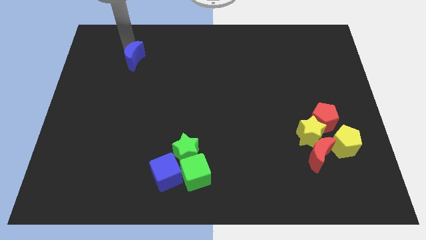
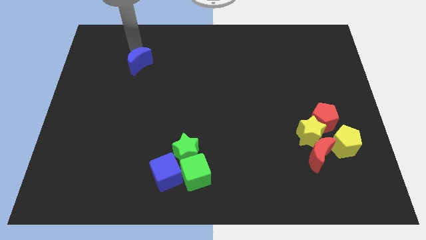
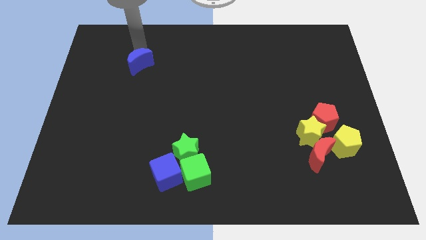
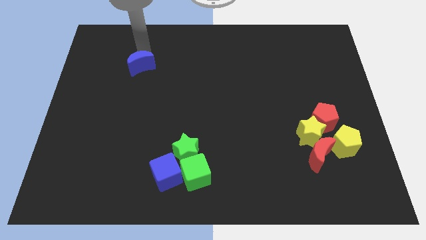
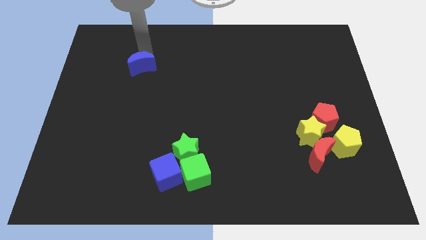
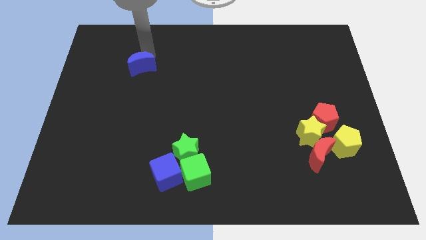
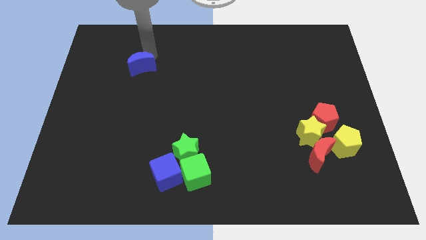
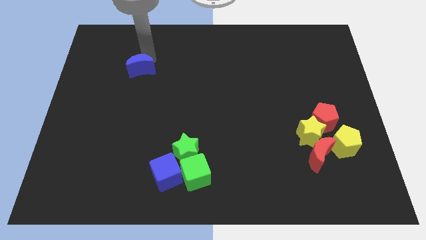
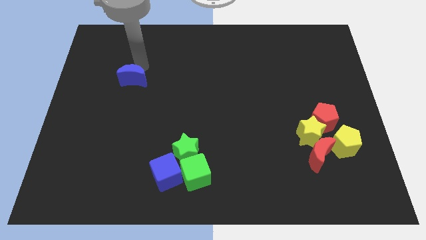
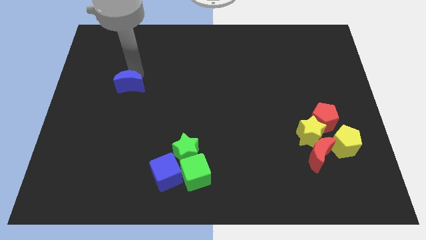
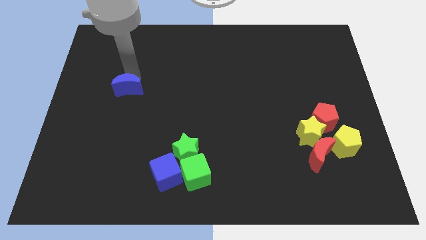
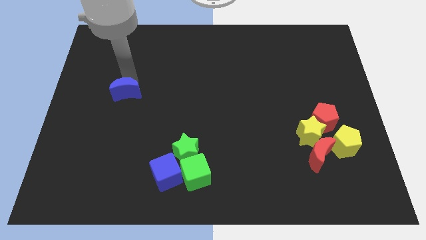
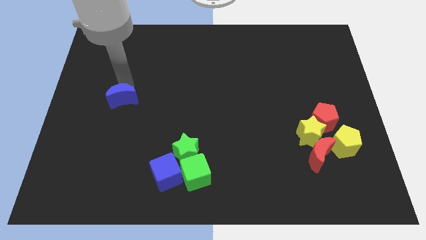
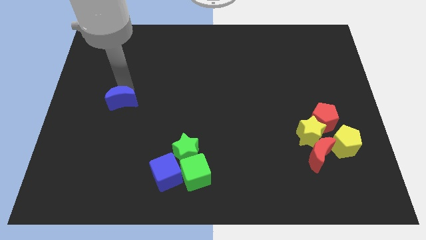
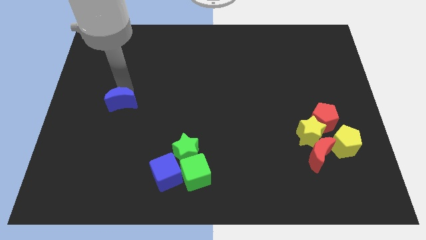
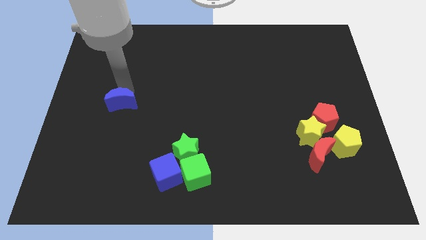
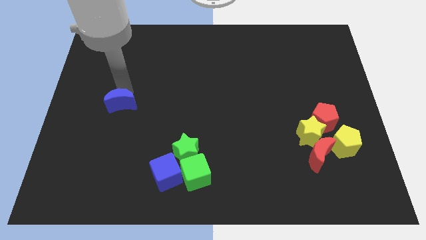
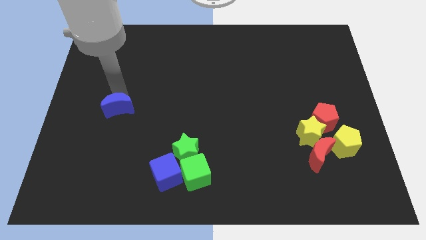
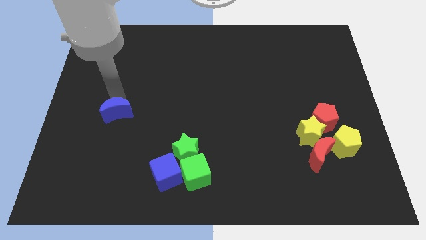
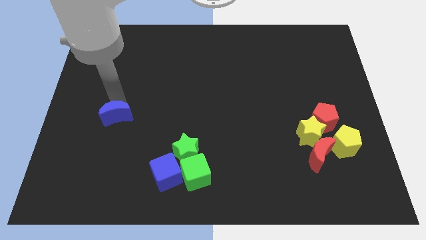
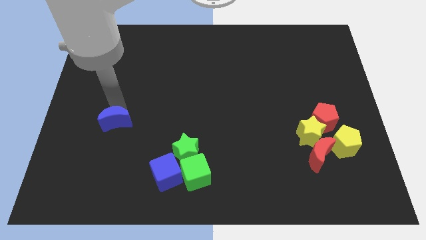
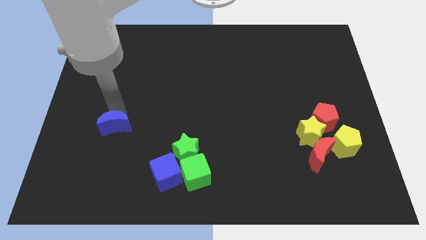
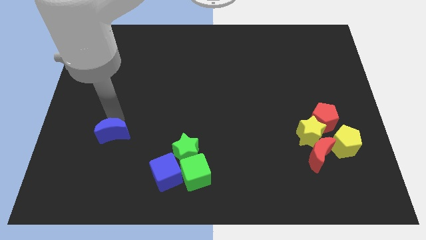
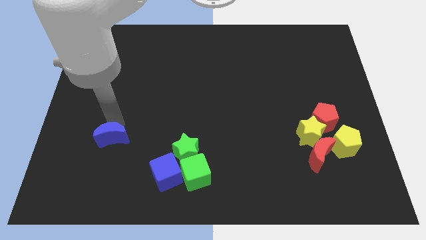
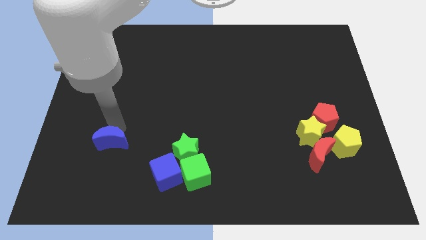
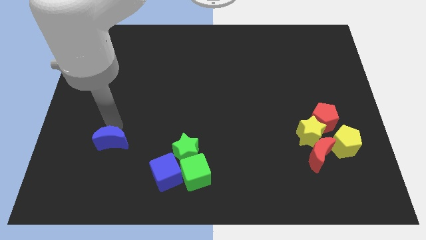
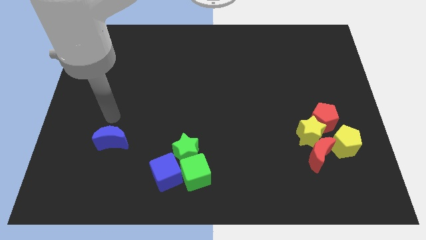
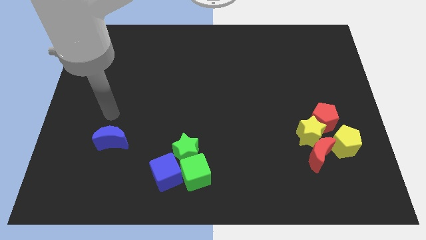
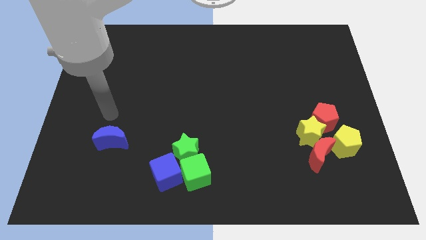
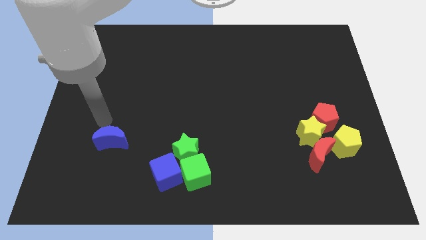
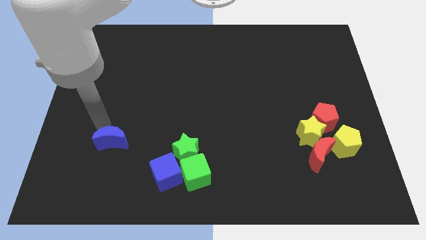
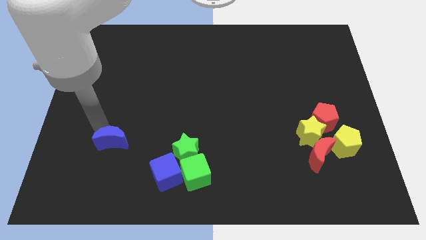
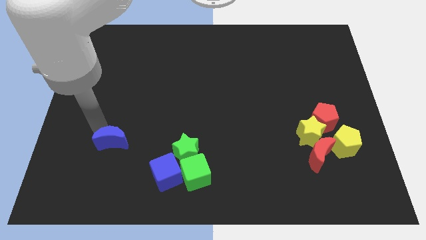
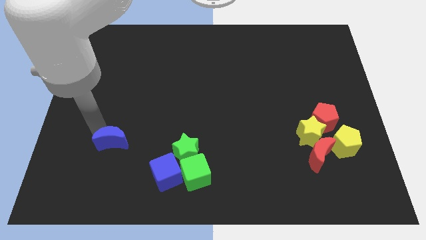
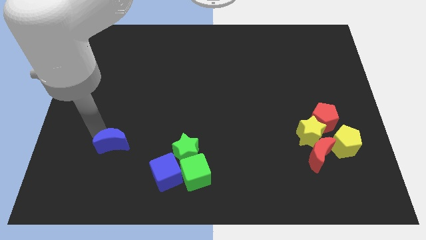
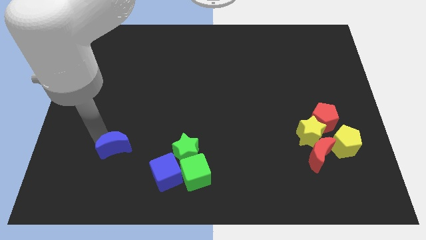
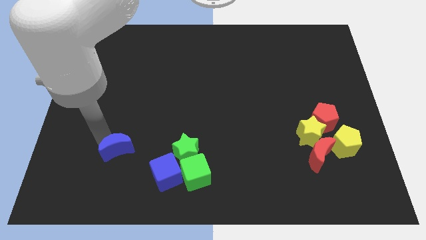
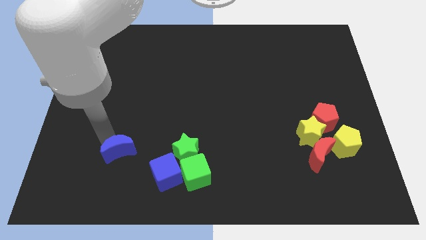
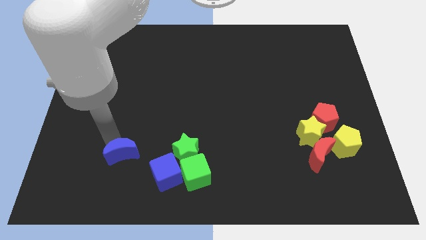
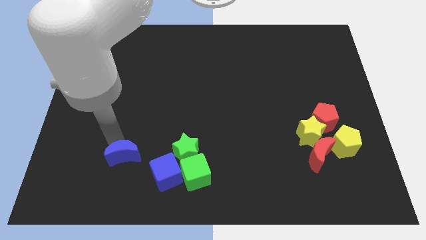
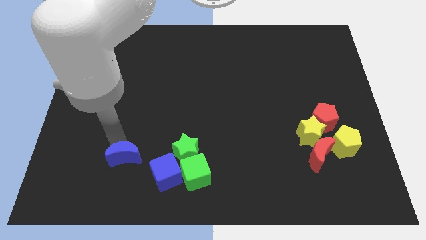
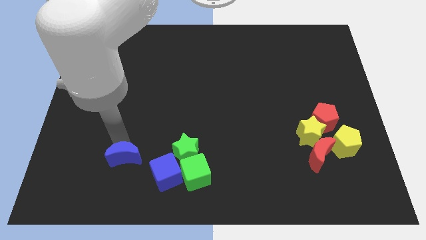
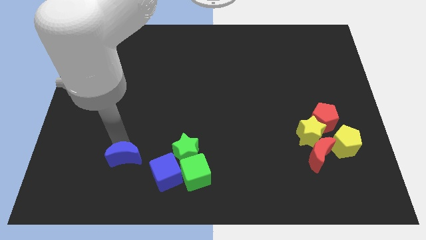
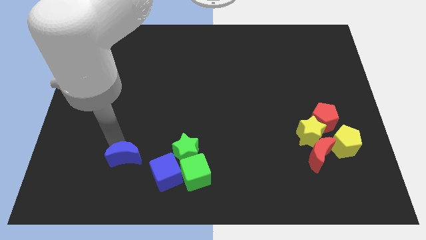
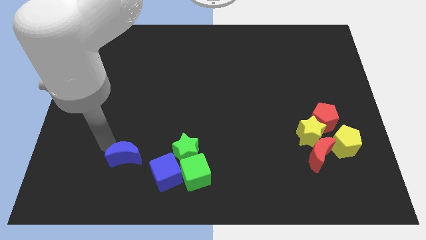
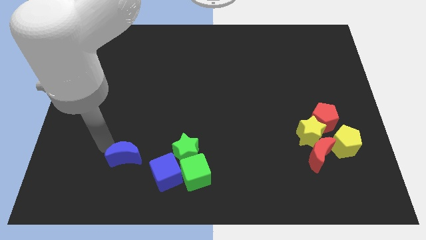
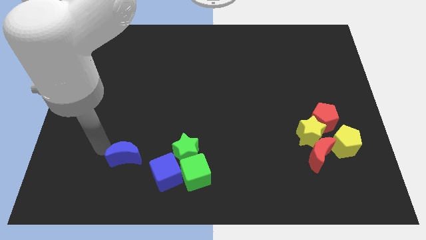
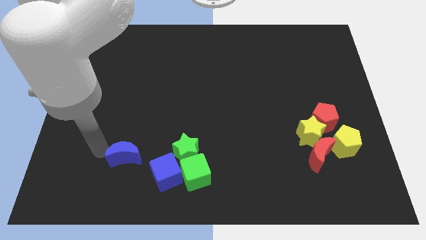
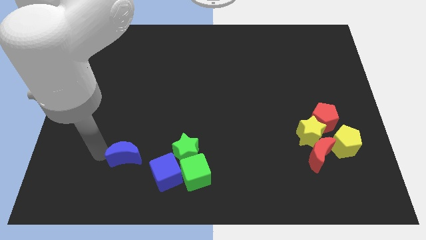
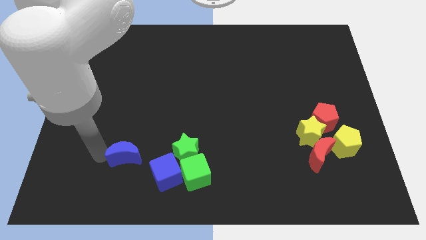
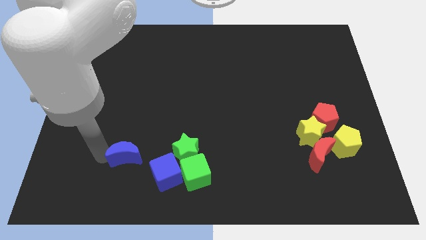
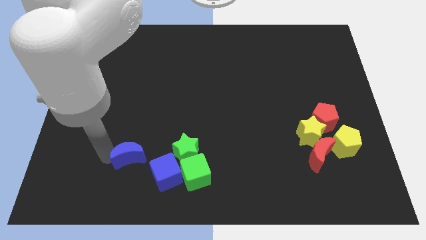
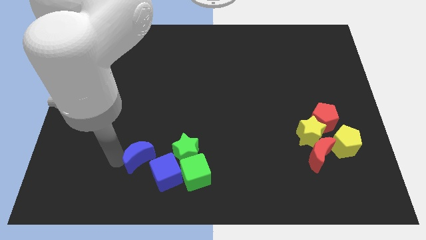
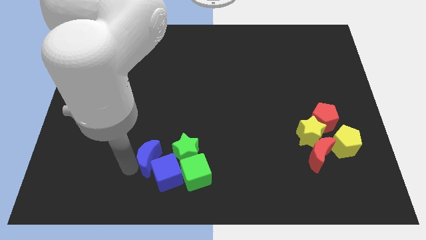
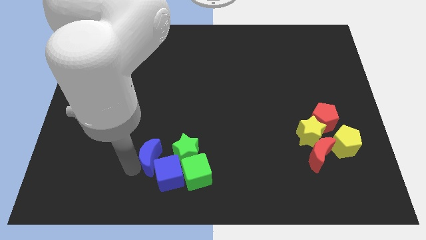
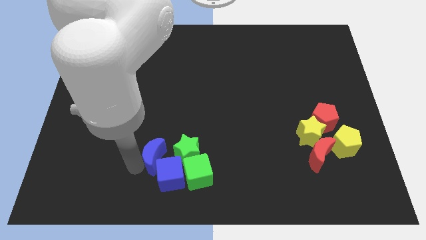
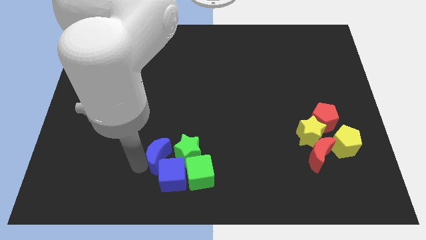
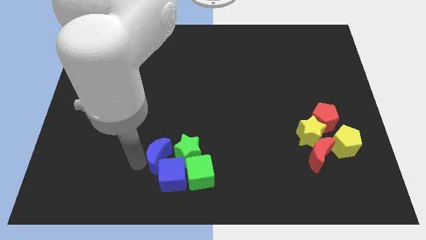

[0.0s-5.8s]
move the blue moon into a group of blocks

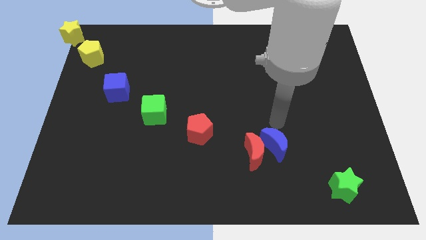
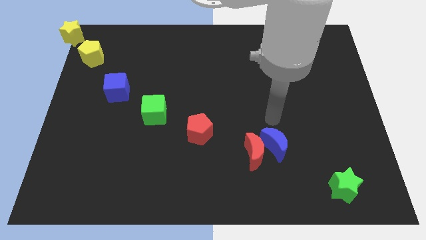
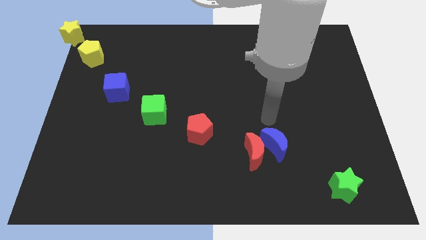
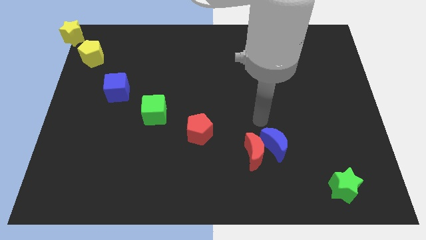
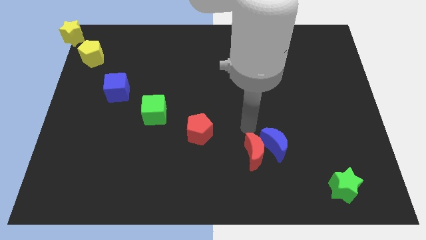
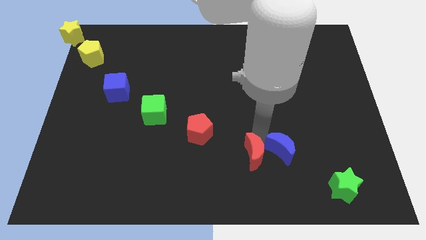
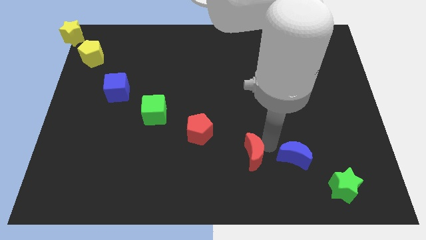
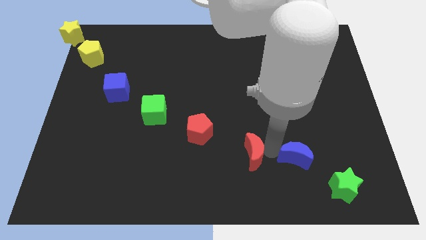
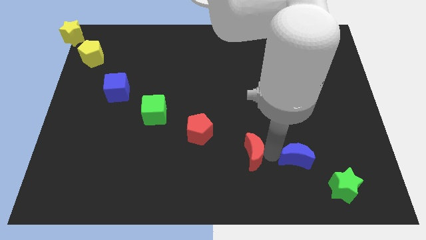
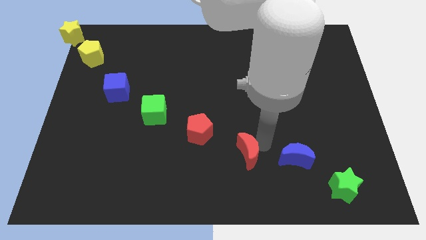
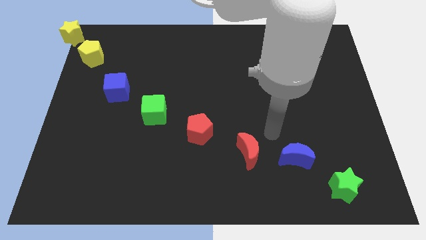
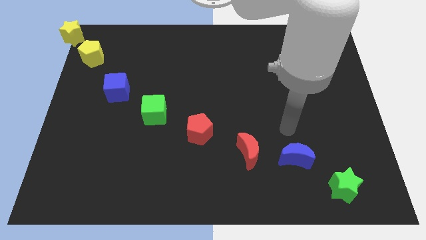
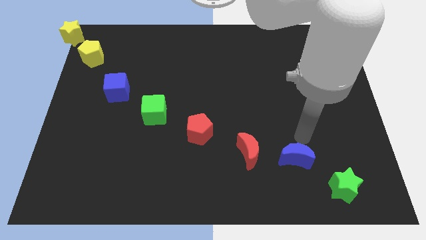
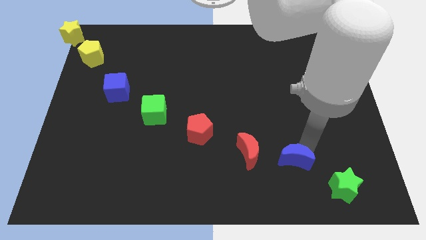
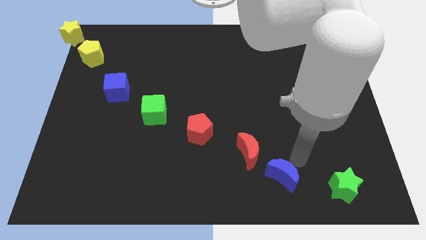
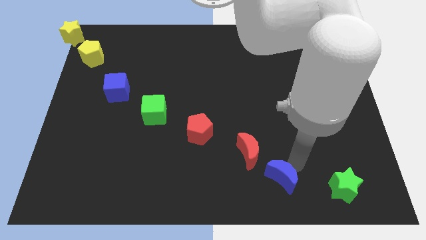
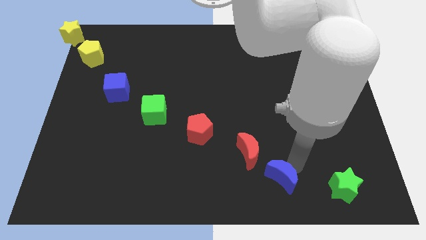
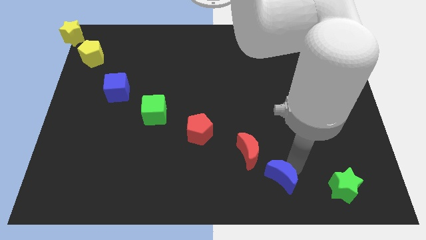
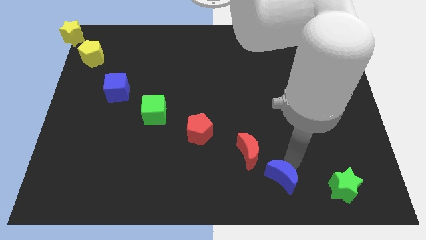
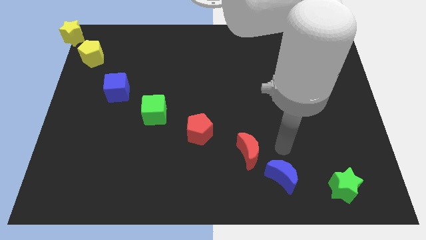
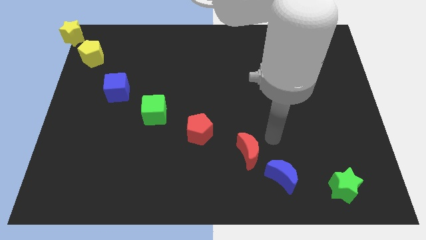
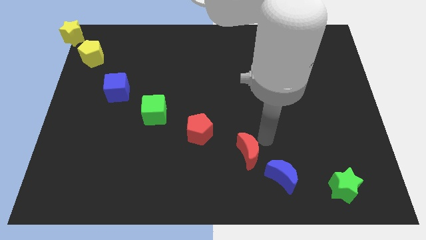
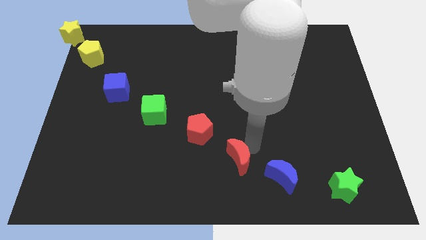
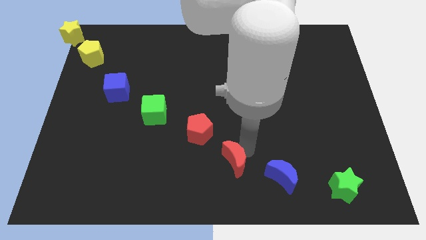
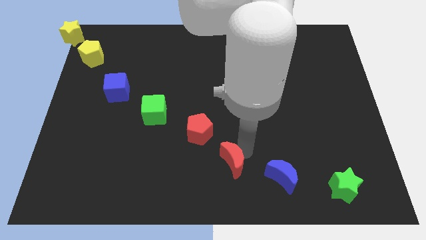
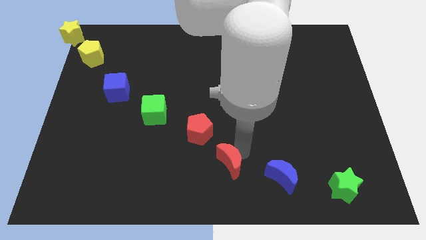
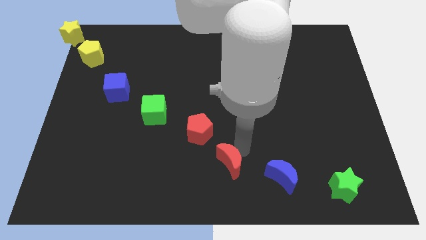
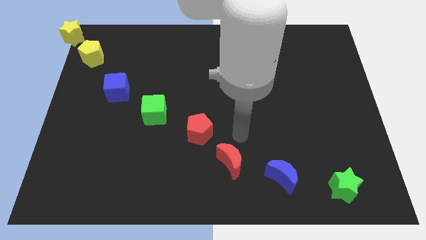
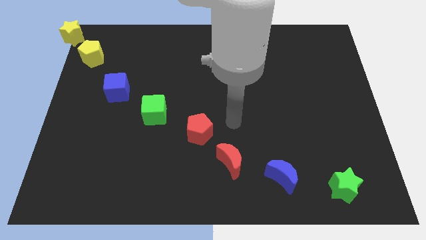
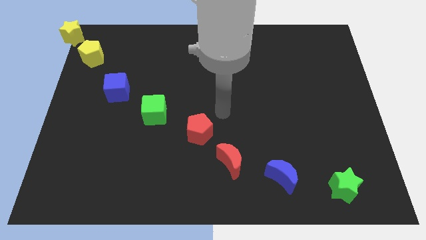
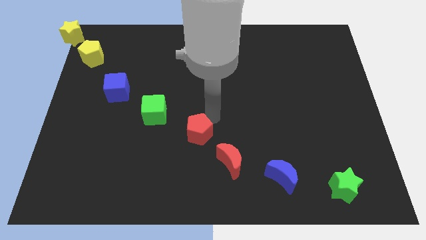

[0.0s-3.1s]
separate the blue and red crescent from each other
